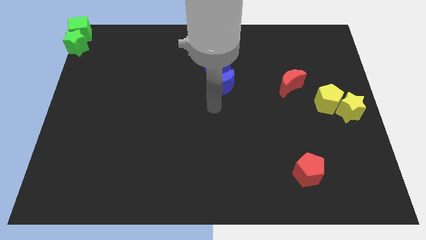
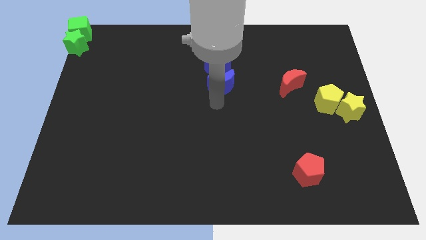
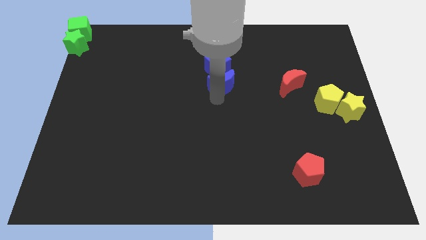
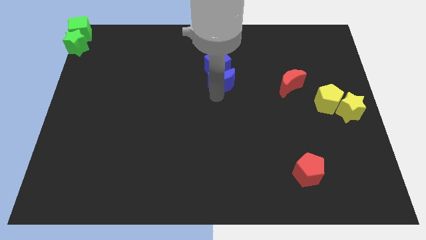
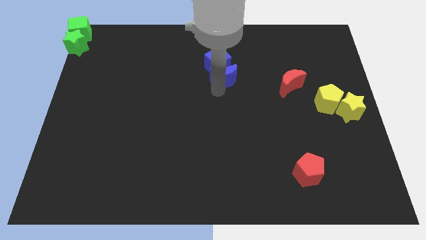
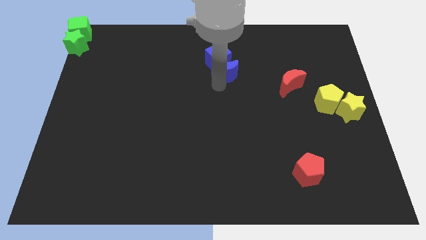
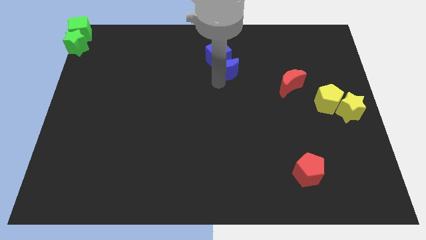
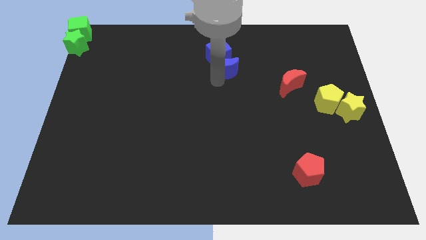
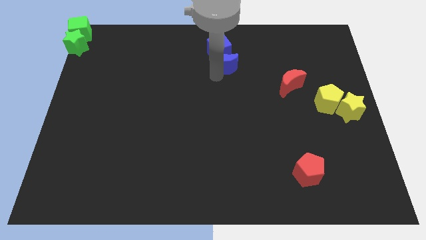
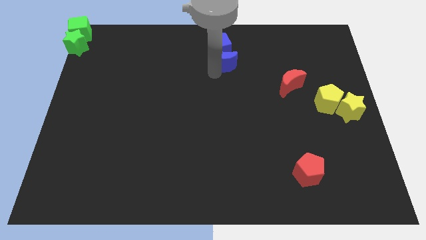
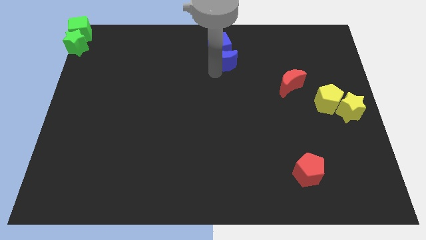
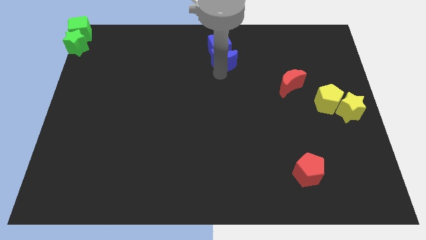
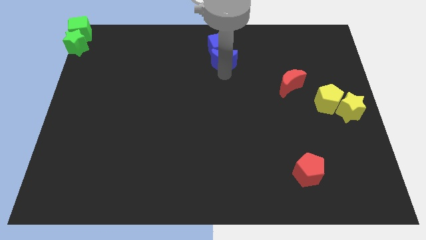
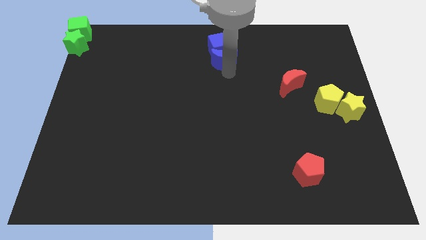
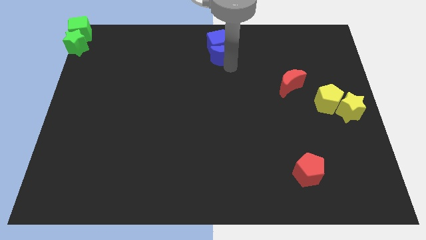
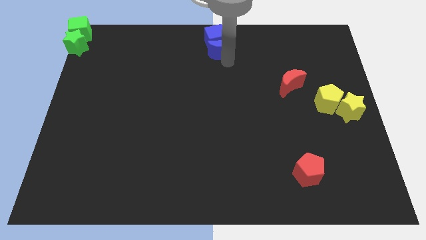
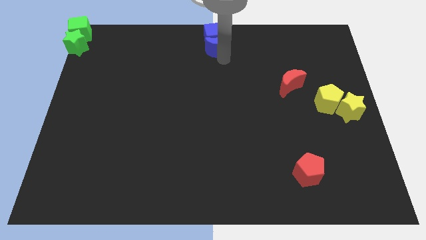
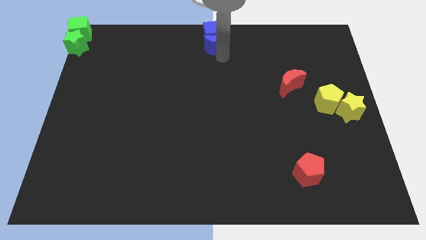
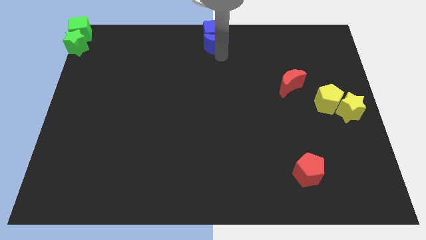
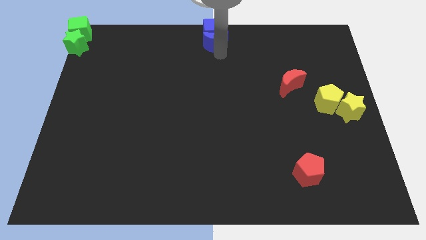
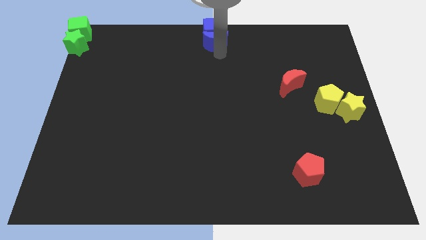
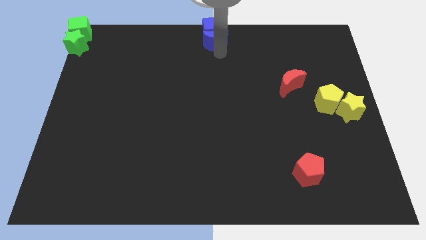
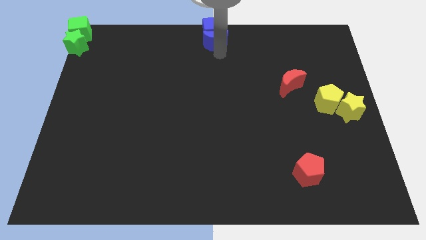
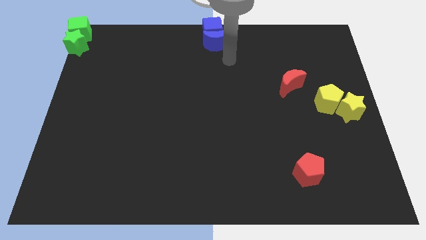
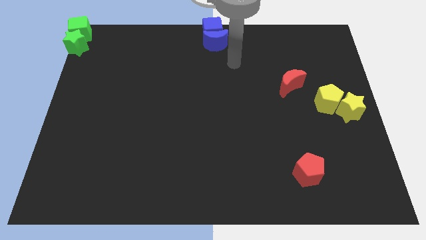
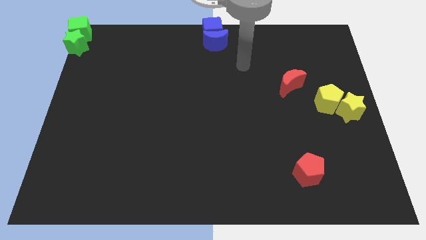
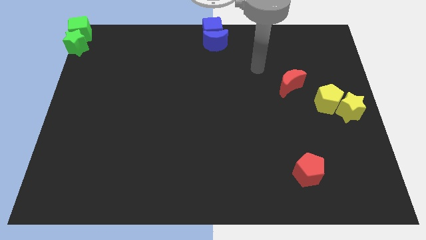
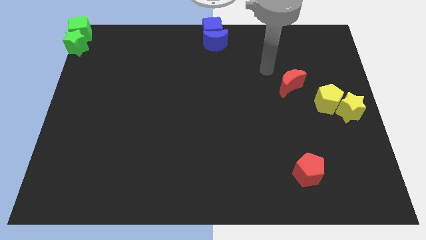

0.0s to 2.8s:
push the blue moon into the blue cube

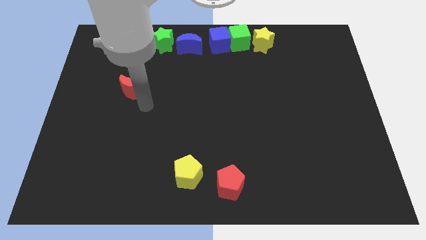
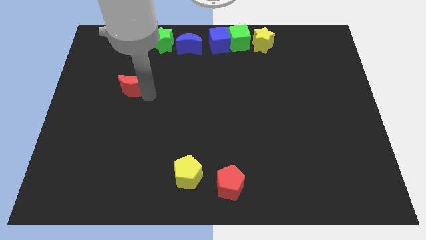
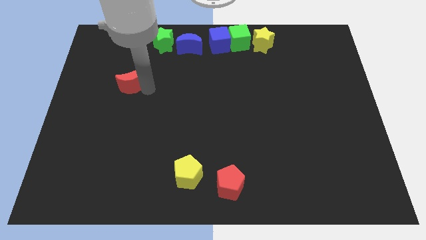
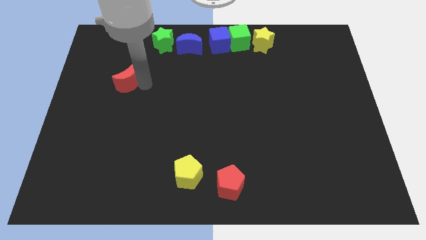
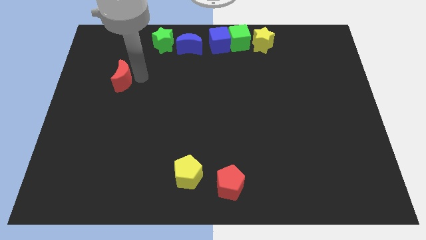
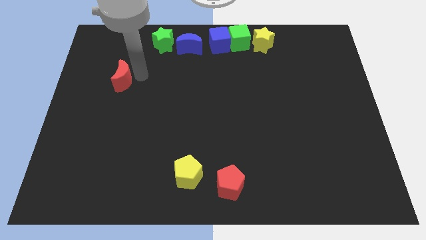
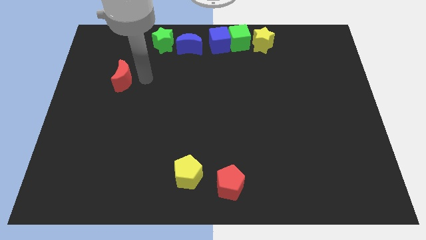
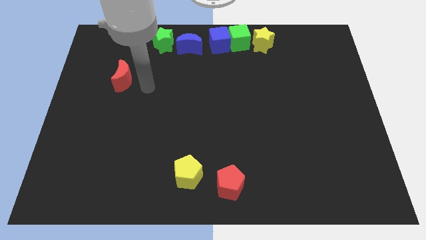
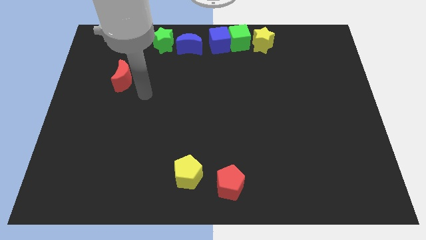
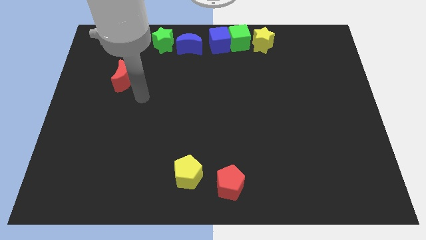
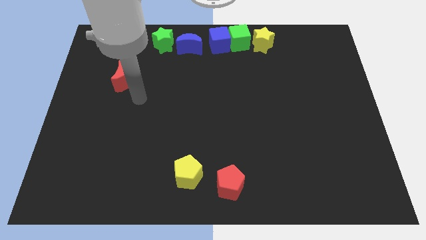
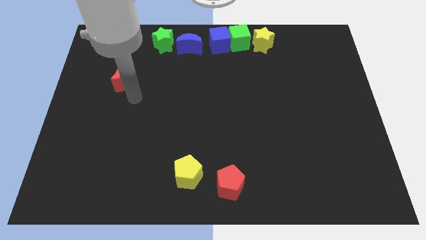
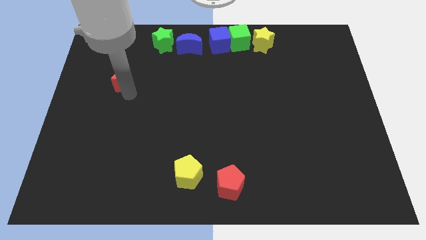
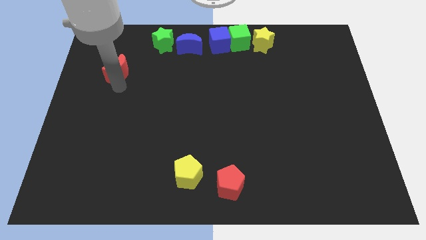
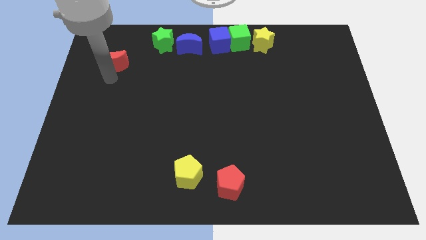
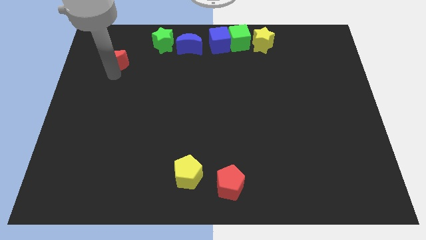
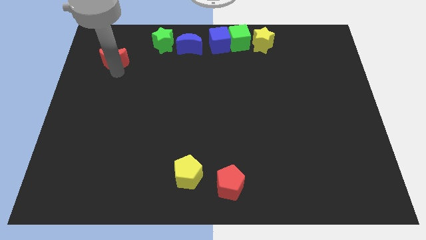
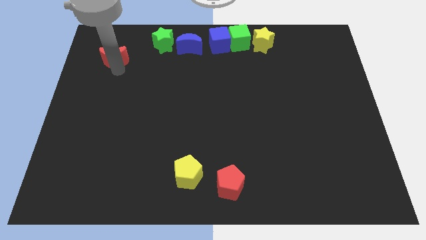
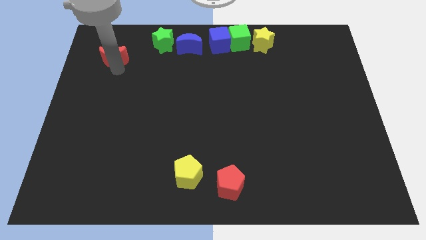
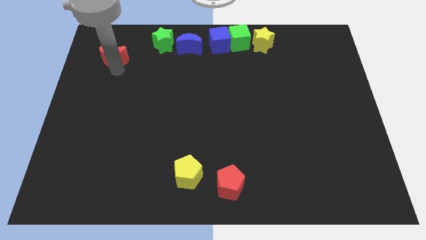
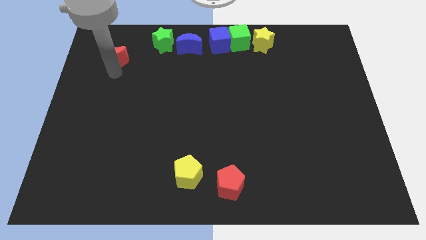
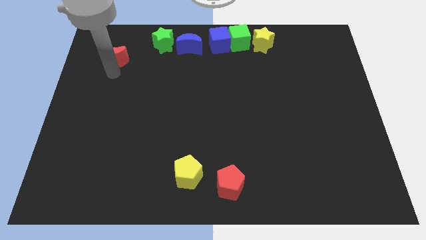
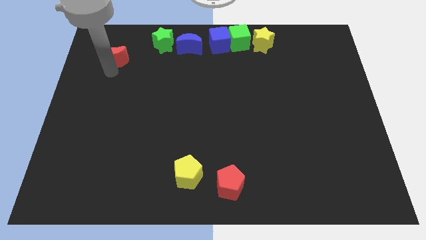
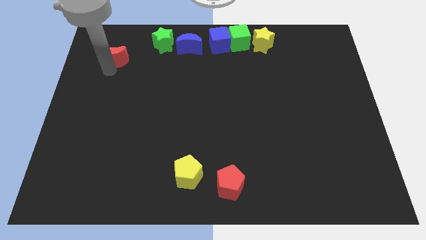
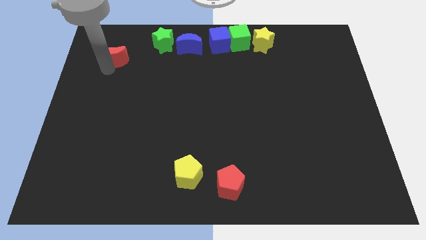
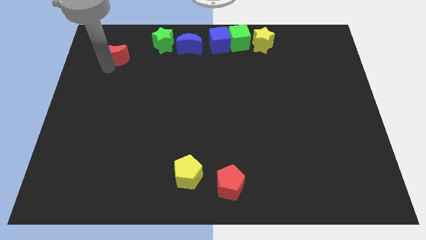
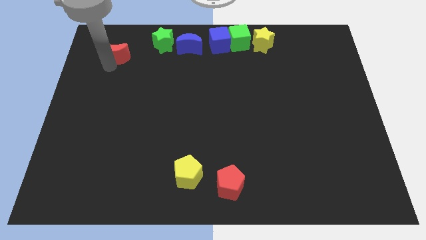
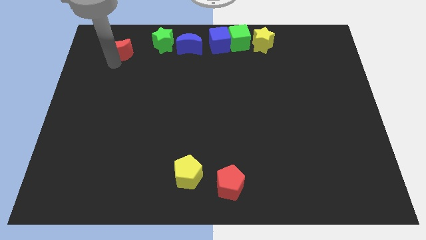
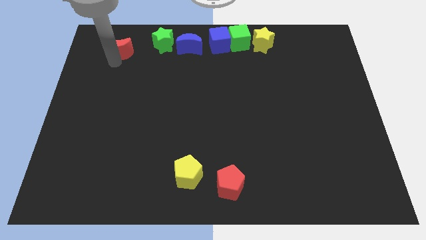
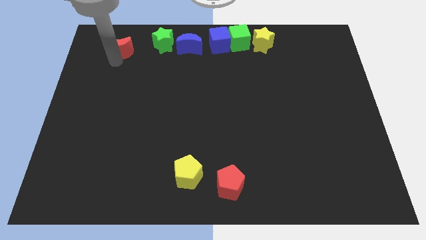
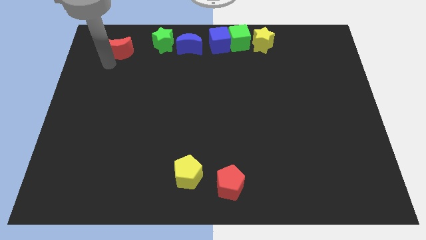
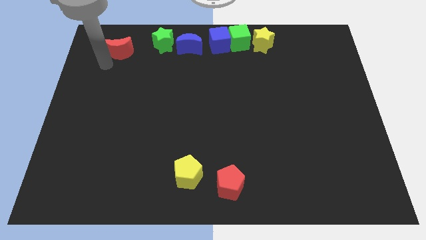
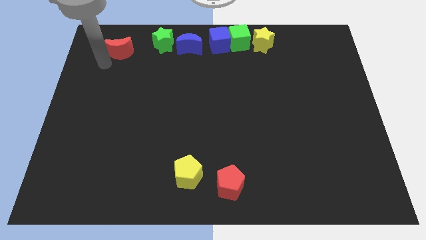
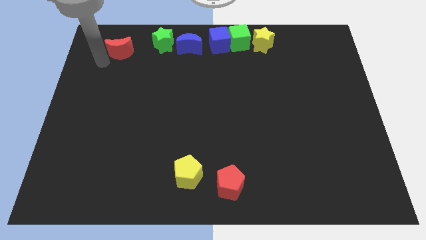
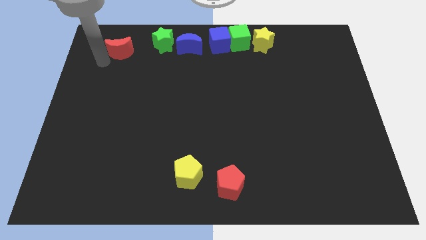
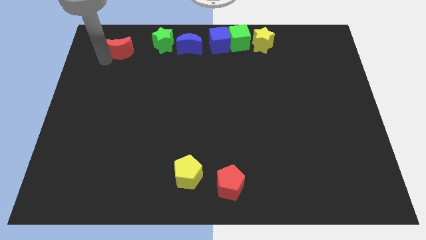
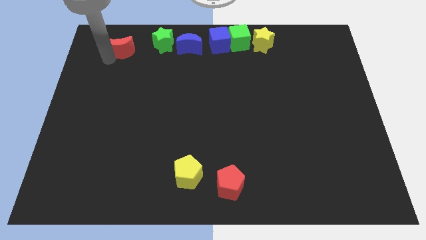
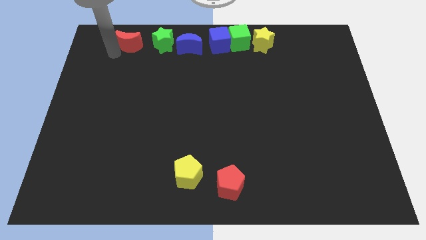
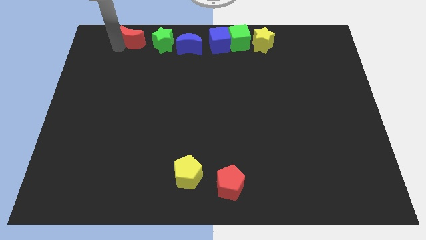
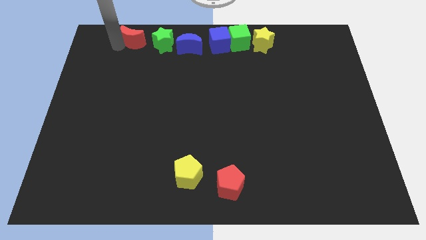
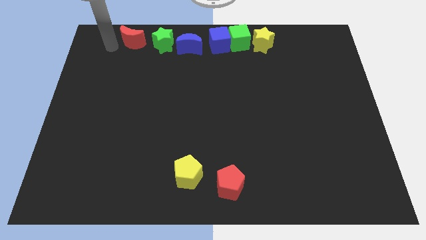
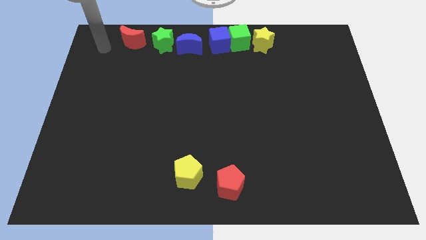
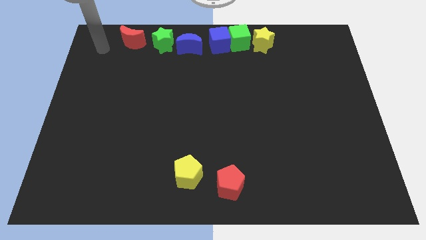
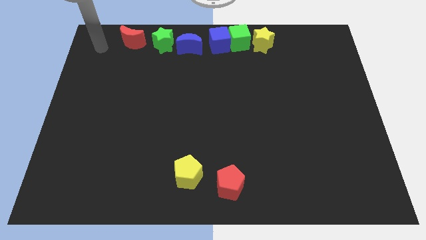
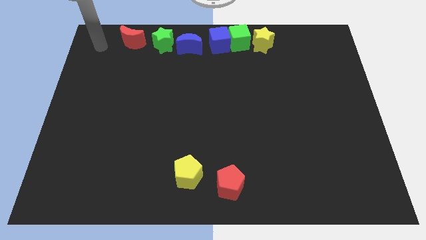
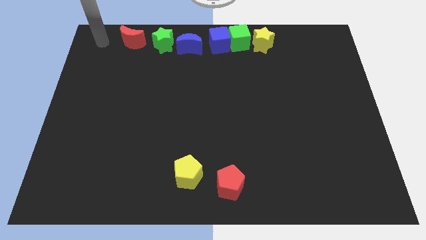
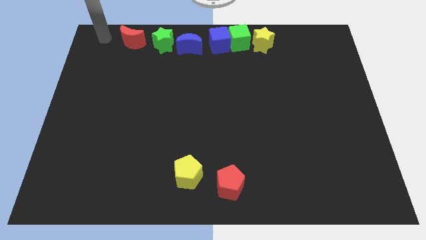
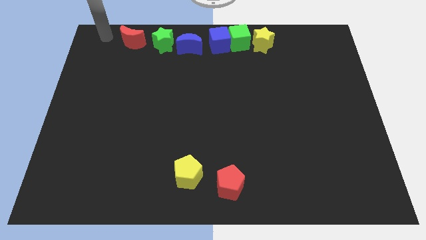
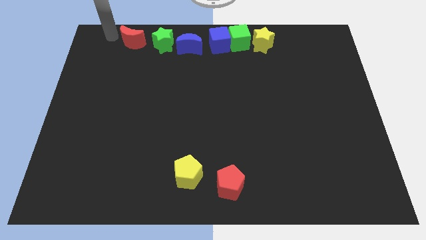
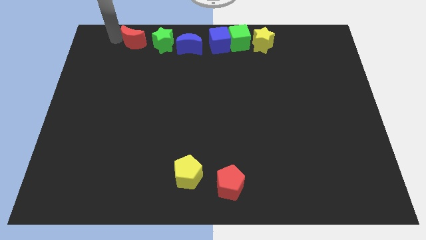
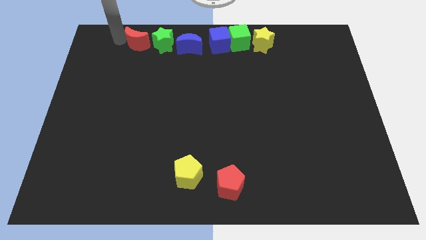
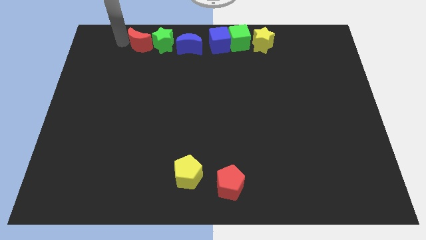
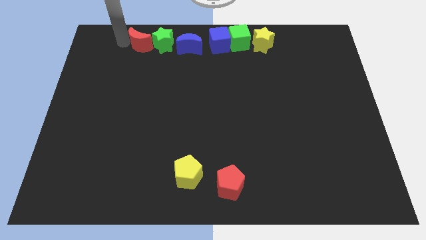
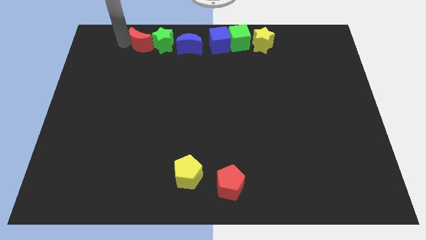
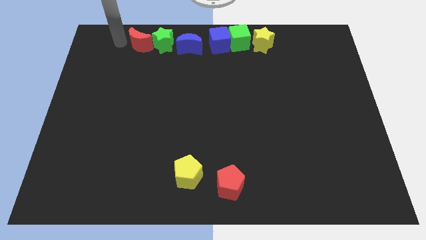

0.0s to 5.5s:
push the red crescent into the left side of the green star

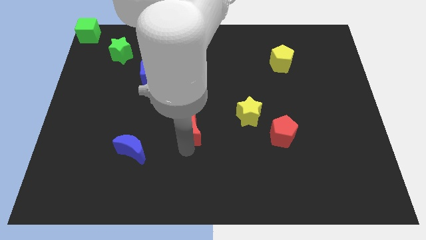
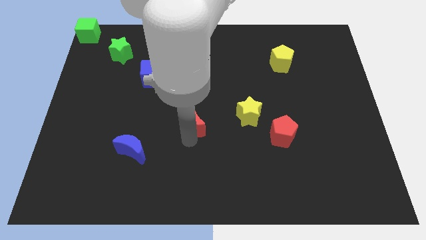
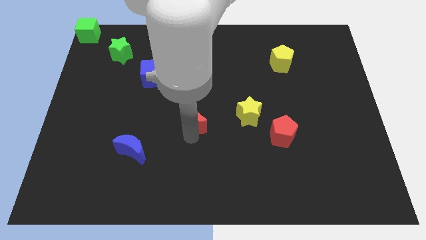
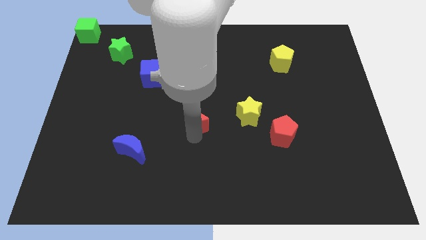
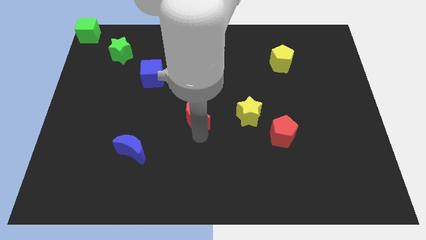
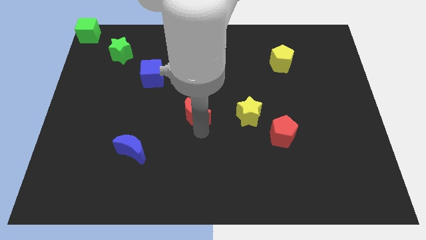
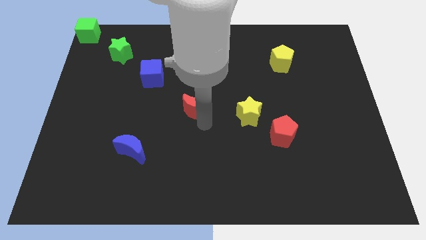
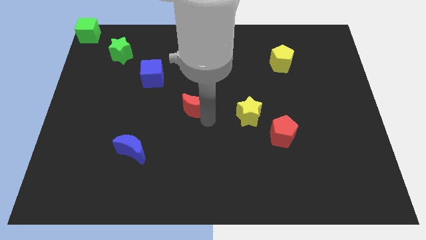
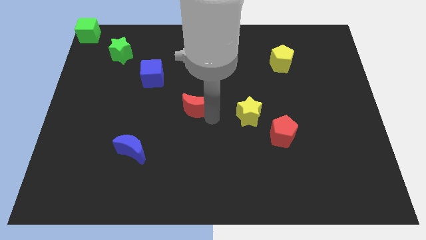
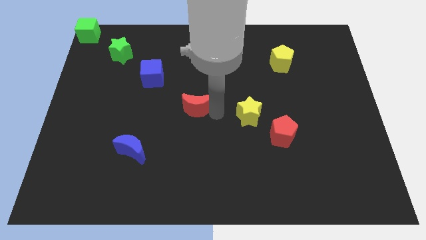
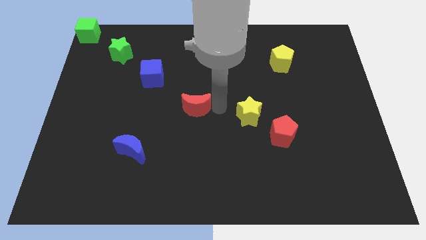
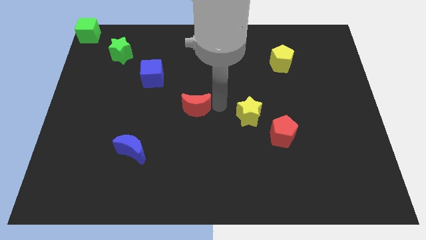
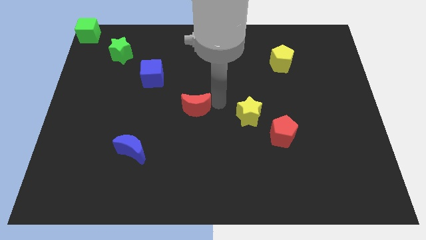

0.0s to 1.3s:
place the red moon in between the yellow star and blue cube to form a line
